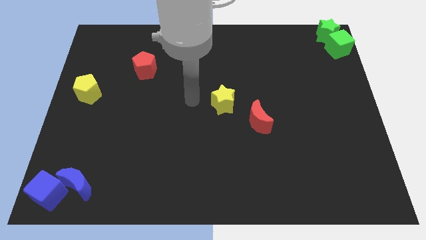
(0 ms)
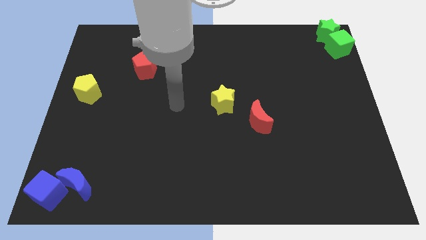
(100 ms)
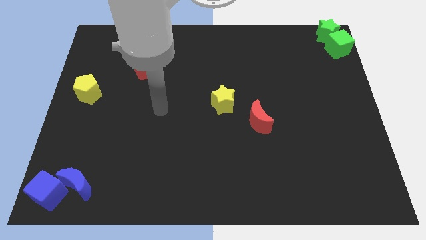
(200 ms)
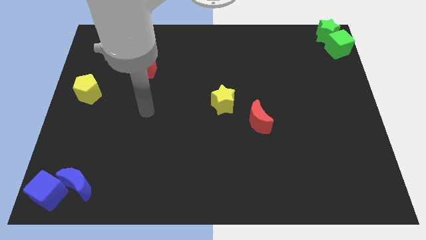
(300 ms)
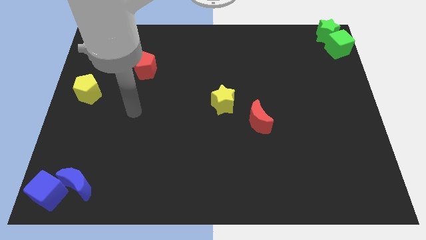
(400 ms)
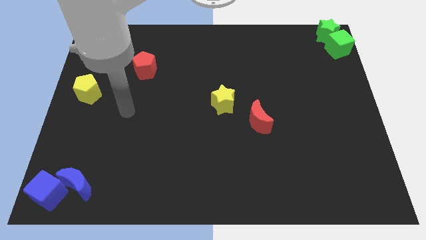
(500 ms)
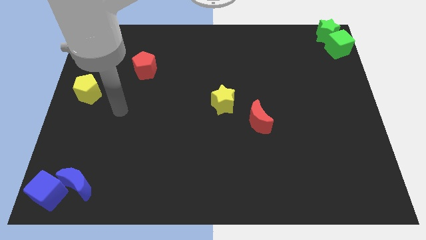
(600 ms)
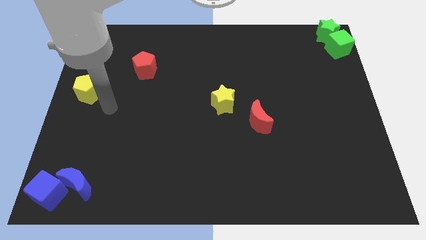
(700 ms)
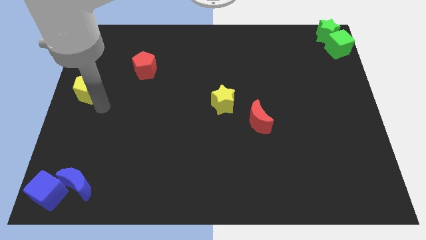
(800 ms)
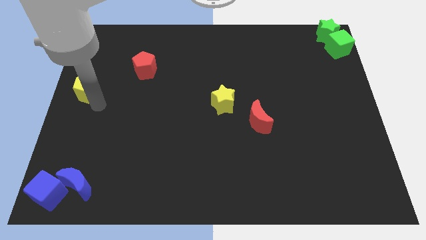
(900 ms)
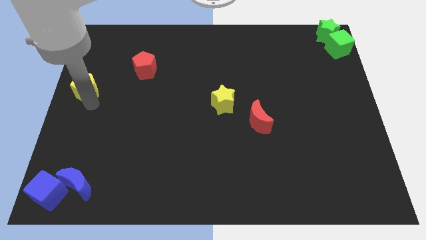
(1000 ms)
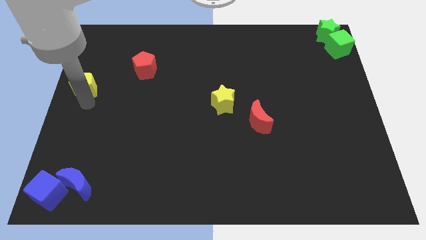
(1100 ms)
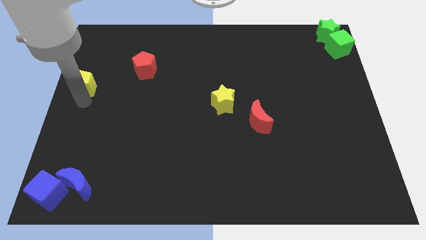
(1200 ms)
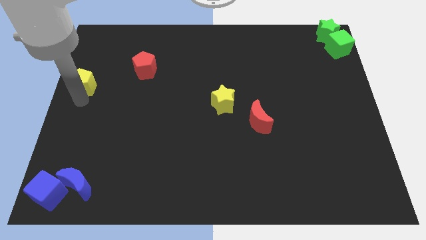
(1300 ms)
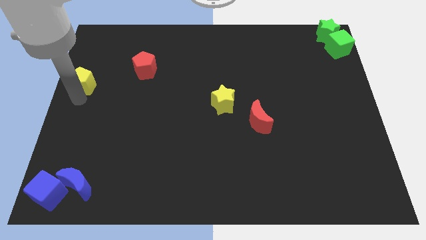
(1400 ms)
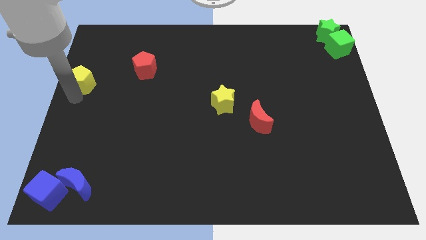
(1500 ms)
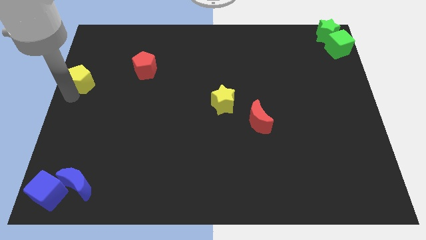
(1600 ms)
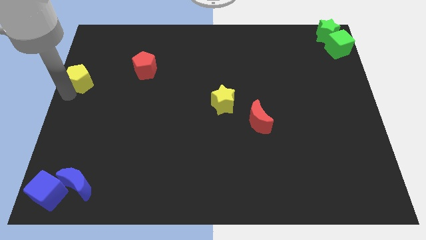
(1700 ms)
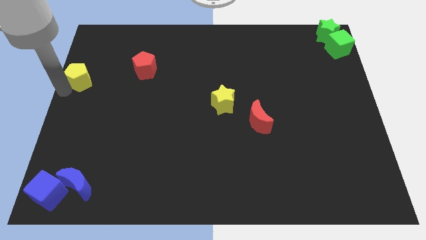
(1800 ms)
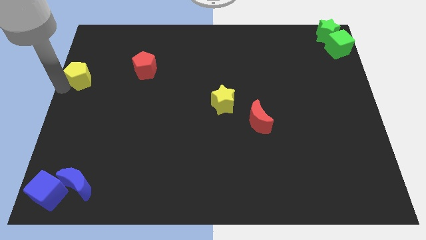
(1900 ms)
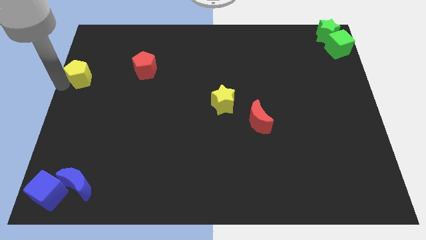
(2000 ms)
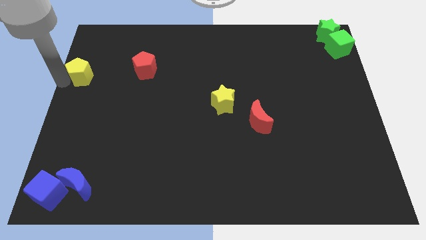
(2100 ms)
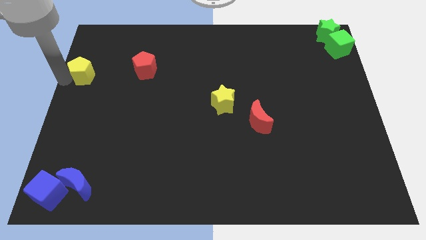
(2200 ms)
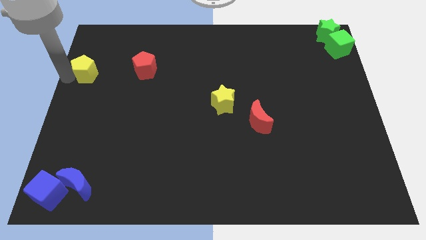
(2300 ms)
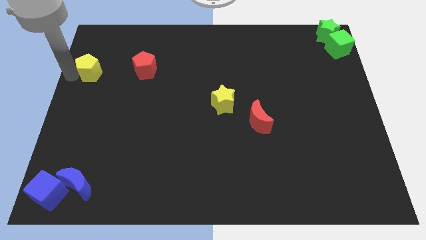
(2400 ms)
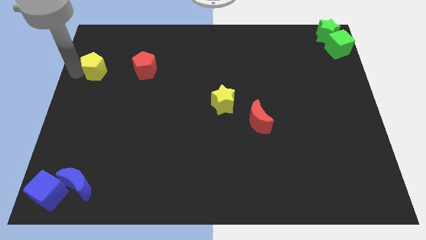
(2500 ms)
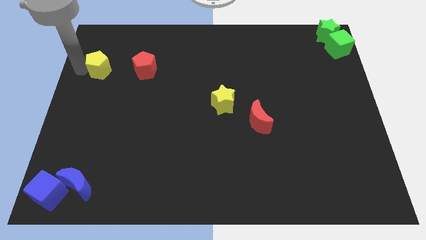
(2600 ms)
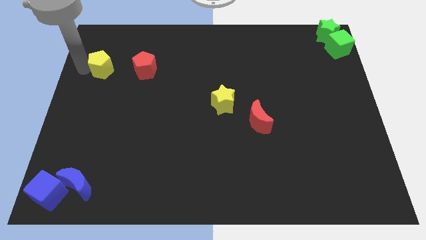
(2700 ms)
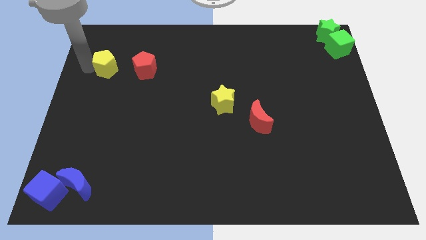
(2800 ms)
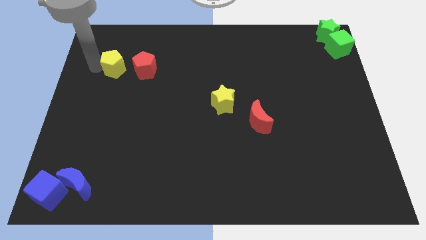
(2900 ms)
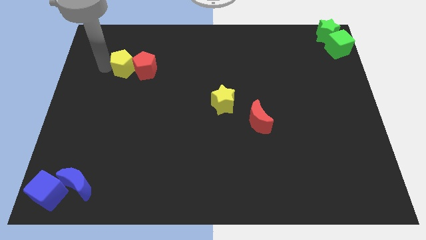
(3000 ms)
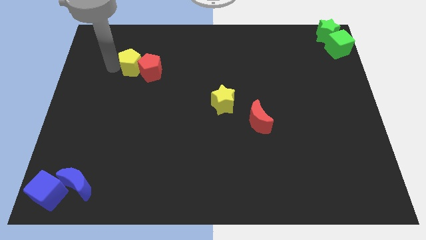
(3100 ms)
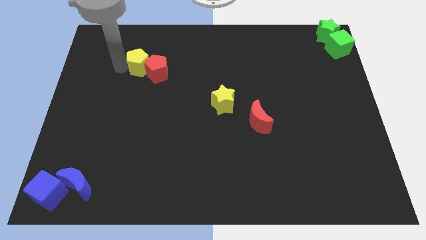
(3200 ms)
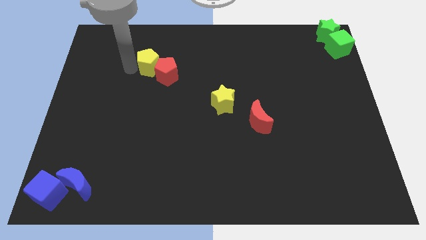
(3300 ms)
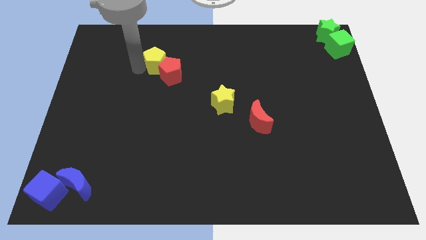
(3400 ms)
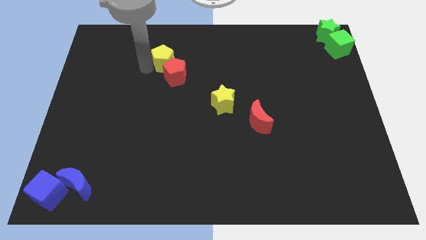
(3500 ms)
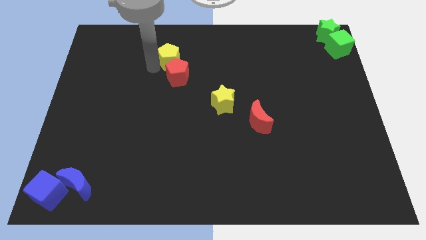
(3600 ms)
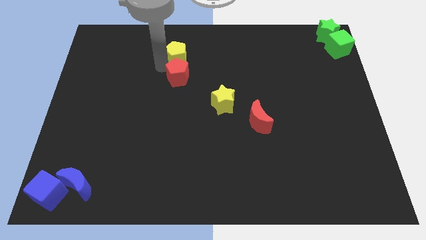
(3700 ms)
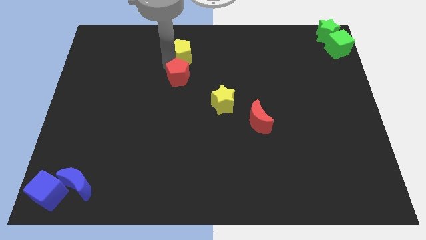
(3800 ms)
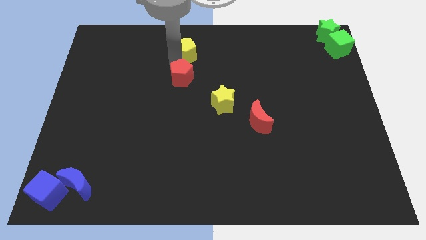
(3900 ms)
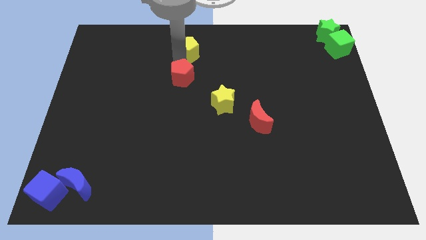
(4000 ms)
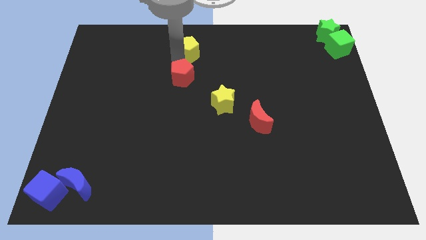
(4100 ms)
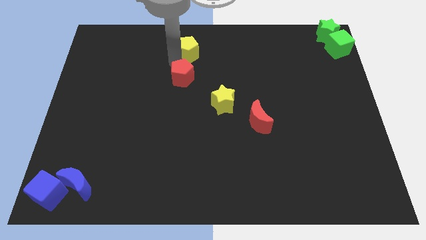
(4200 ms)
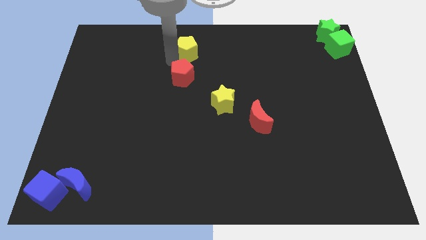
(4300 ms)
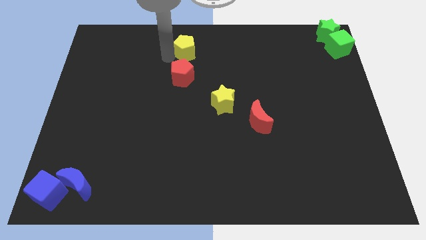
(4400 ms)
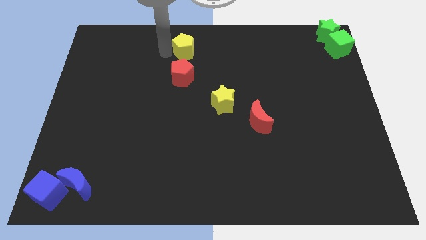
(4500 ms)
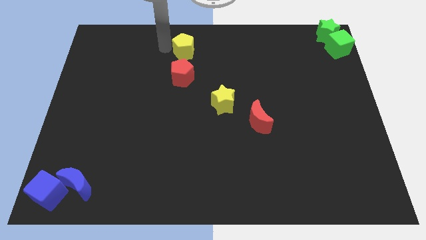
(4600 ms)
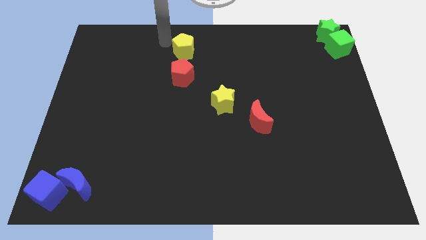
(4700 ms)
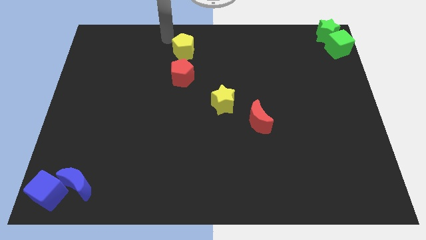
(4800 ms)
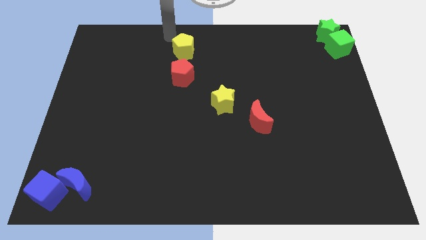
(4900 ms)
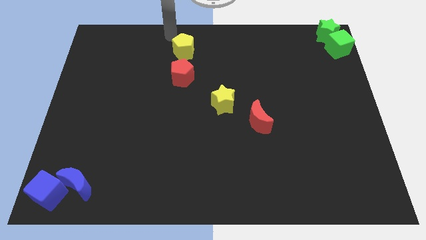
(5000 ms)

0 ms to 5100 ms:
push the yellow pentagon towards the top centre

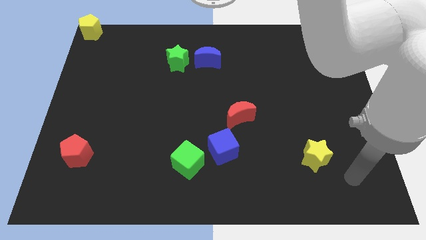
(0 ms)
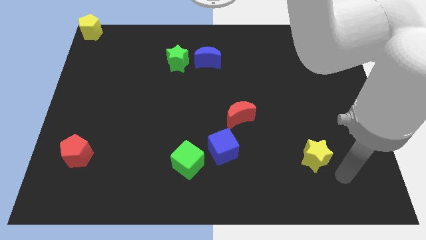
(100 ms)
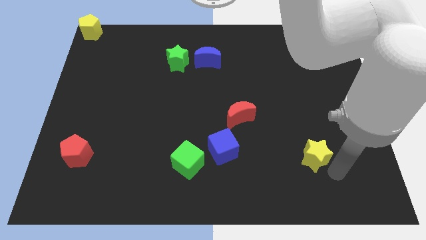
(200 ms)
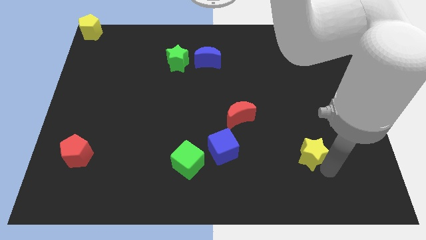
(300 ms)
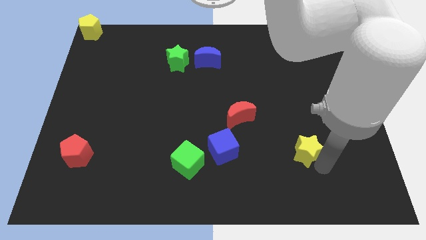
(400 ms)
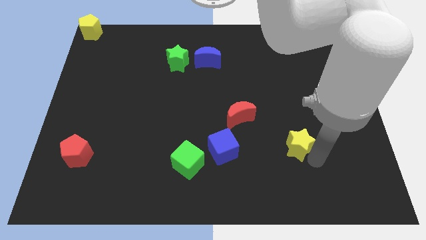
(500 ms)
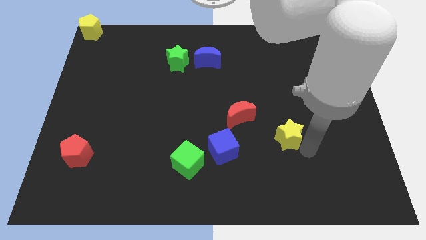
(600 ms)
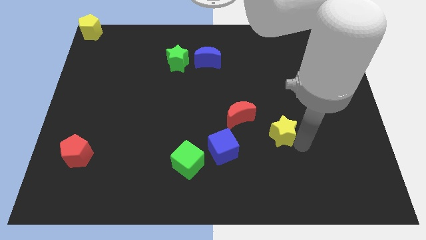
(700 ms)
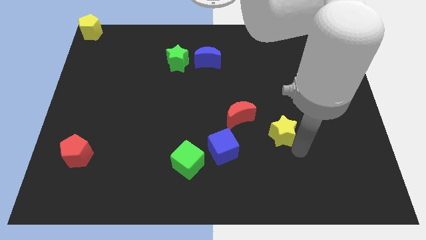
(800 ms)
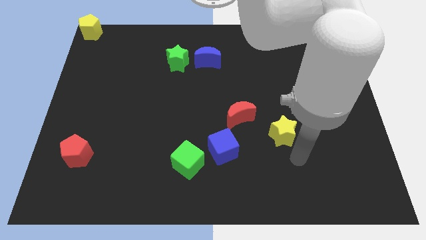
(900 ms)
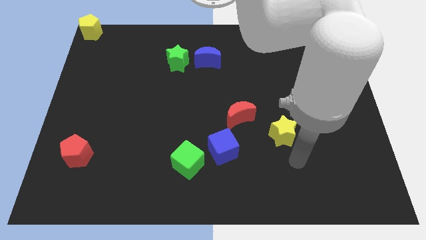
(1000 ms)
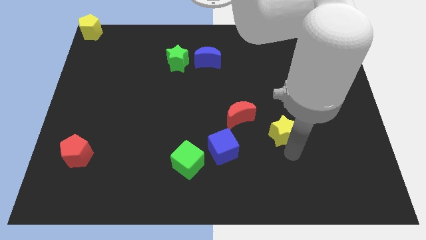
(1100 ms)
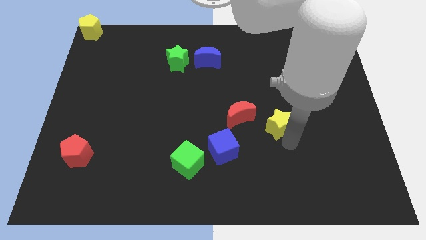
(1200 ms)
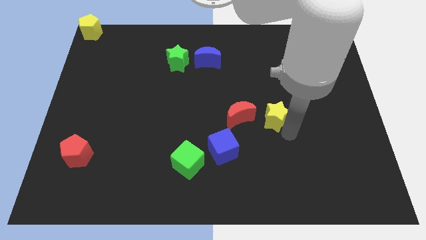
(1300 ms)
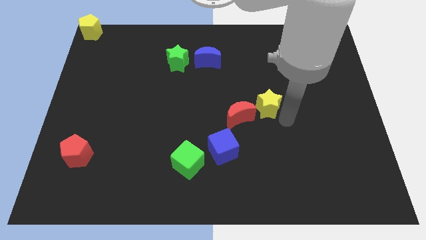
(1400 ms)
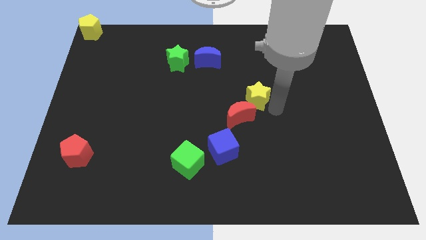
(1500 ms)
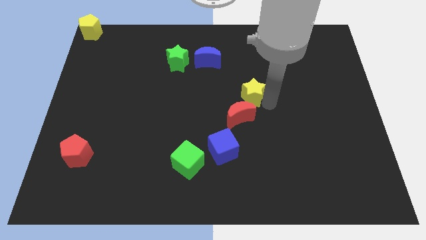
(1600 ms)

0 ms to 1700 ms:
move the yellow star above the red crescent

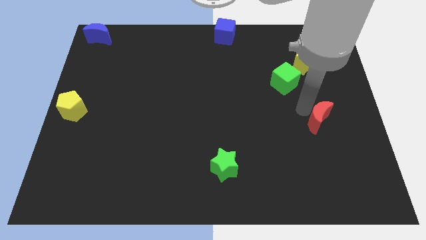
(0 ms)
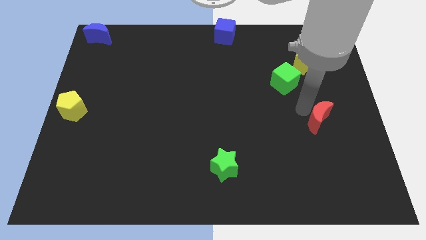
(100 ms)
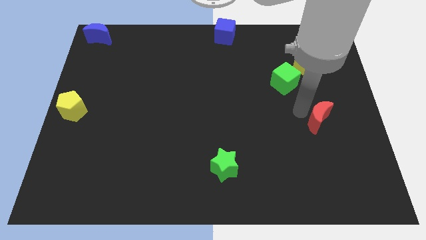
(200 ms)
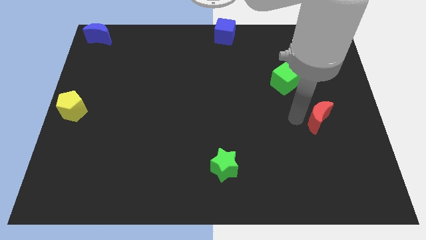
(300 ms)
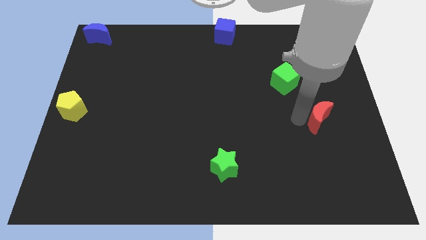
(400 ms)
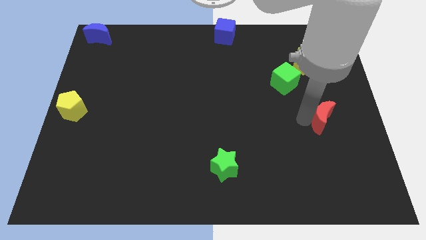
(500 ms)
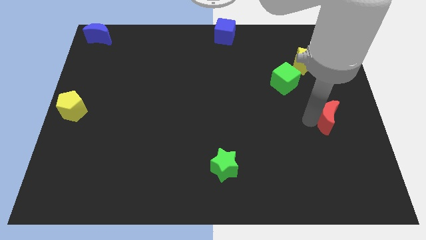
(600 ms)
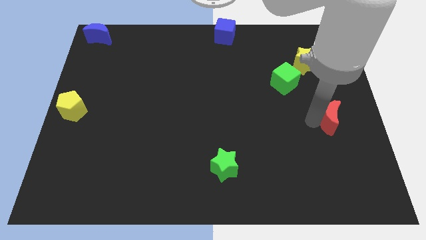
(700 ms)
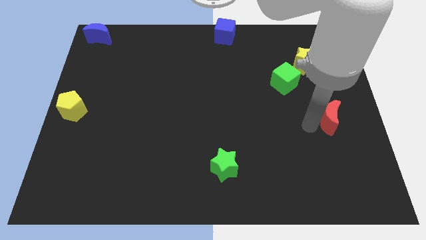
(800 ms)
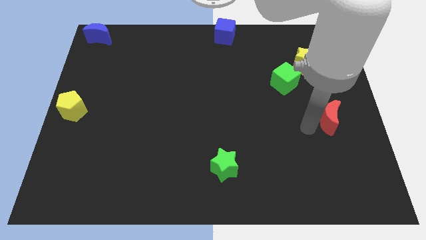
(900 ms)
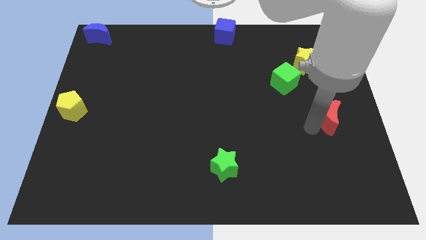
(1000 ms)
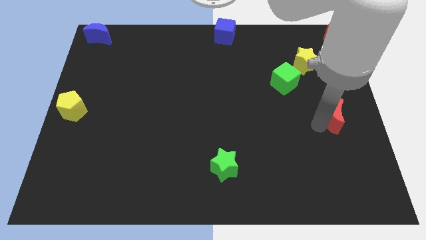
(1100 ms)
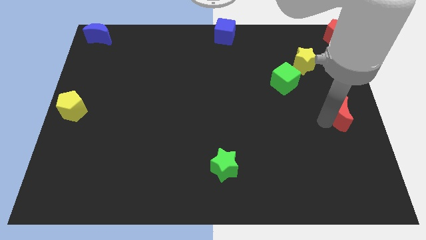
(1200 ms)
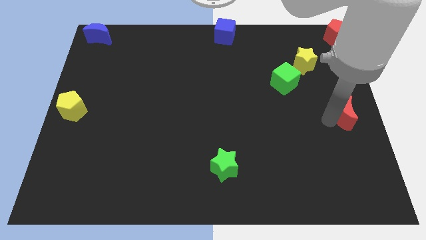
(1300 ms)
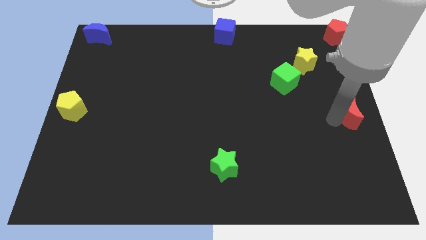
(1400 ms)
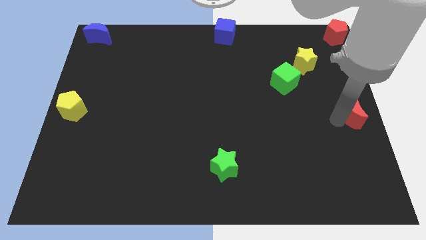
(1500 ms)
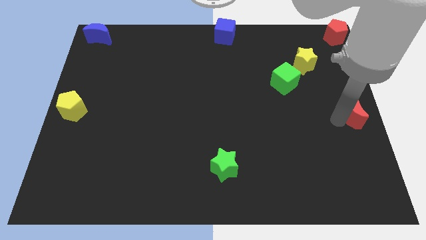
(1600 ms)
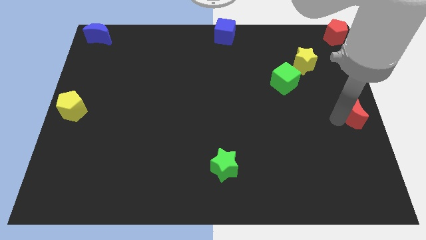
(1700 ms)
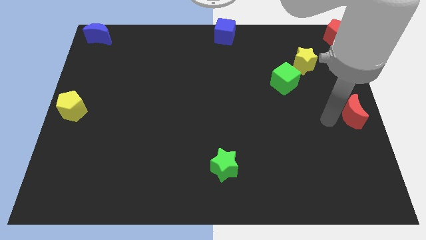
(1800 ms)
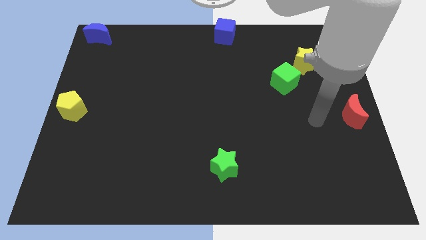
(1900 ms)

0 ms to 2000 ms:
place the red moon at the right centre of the board
